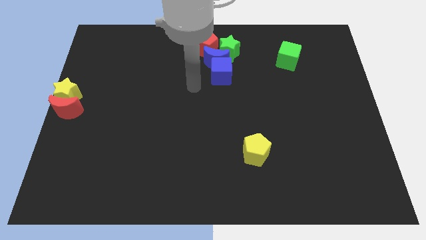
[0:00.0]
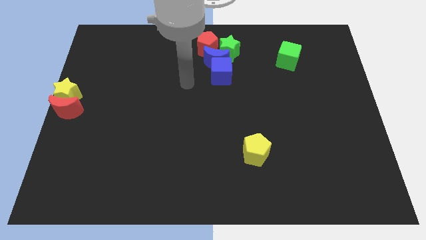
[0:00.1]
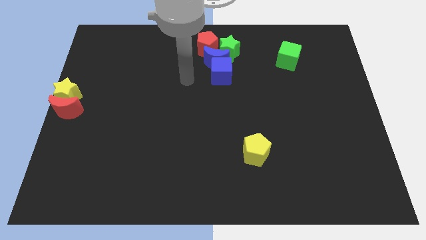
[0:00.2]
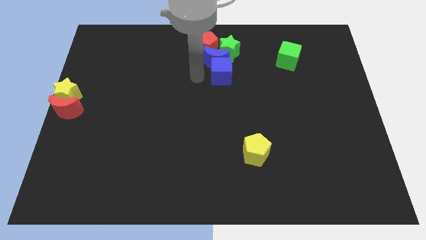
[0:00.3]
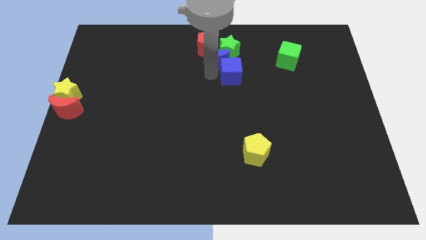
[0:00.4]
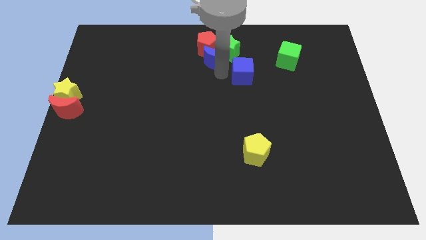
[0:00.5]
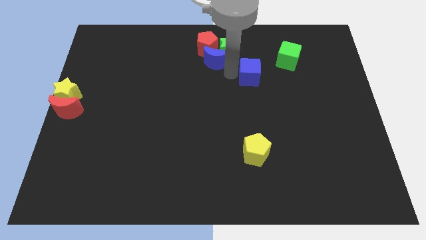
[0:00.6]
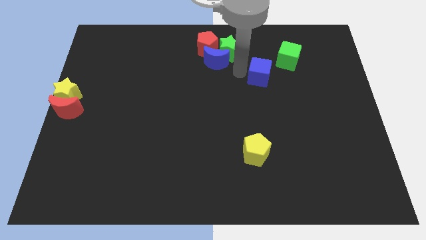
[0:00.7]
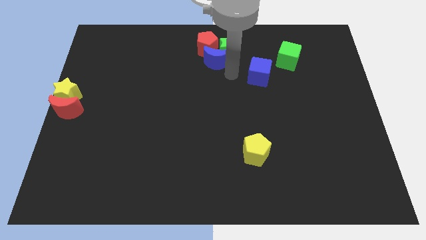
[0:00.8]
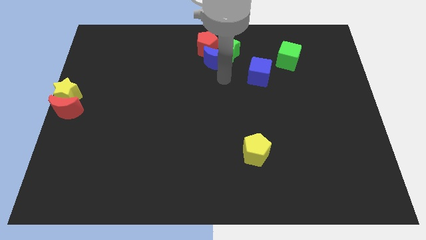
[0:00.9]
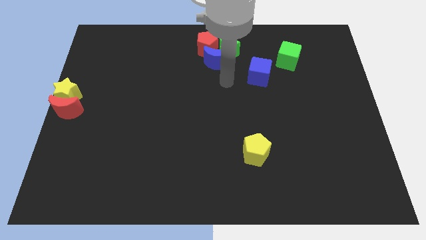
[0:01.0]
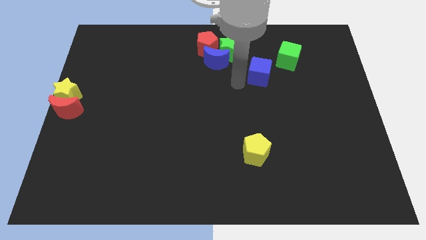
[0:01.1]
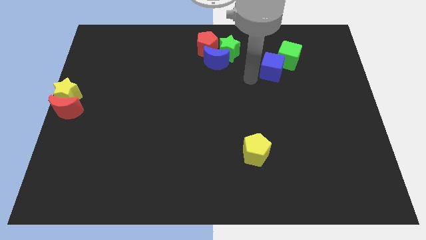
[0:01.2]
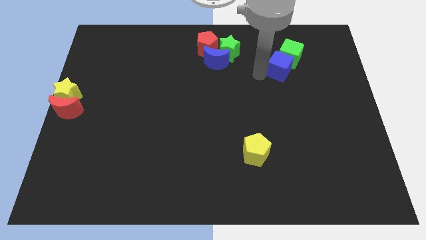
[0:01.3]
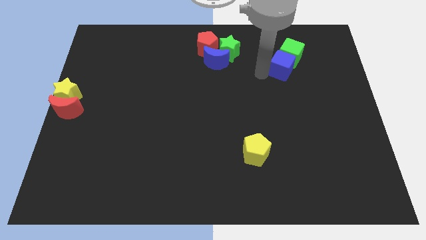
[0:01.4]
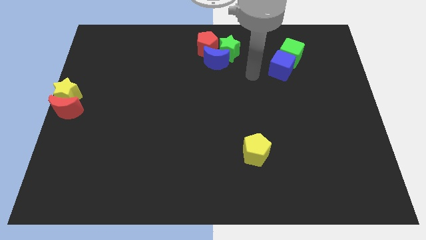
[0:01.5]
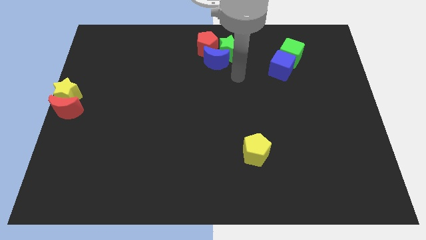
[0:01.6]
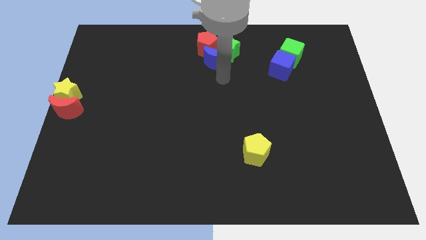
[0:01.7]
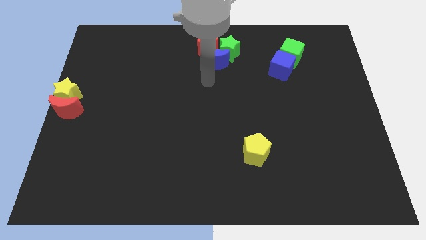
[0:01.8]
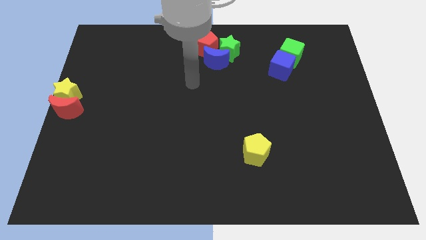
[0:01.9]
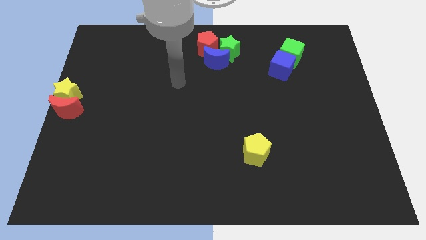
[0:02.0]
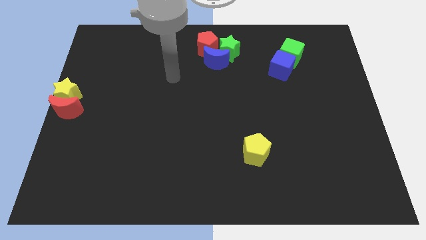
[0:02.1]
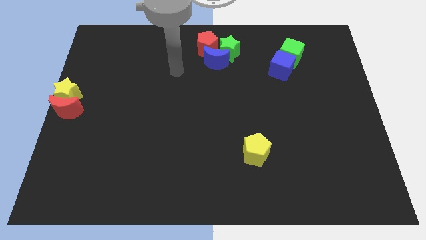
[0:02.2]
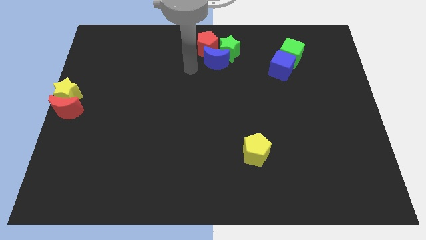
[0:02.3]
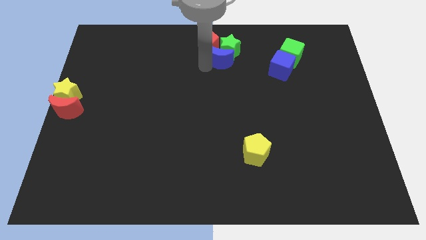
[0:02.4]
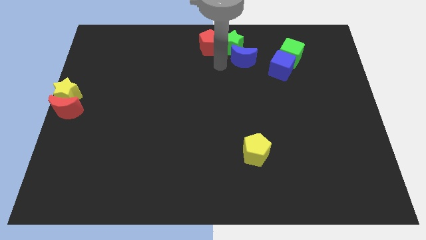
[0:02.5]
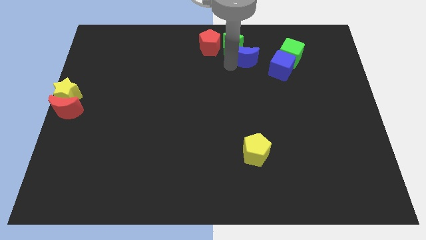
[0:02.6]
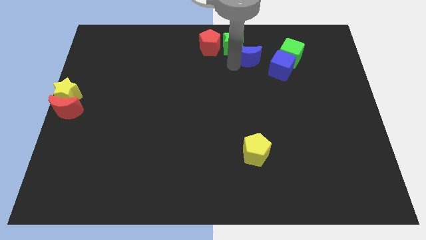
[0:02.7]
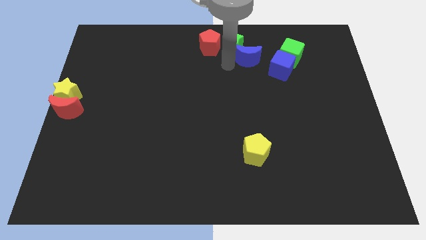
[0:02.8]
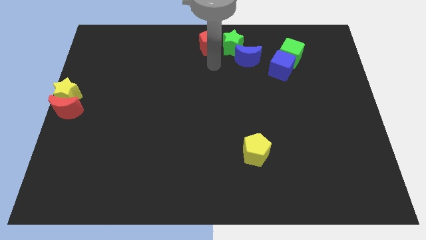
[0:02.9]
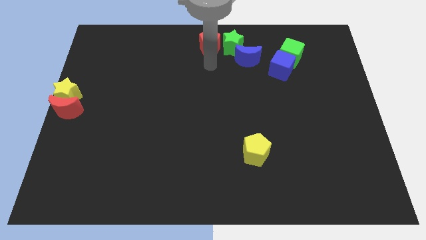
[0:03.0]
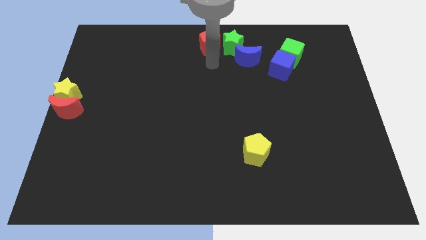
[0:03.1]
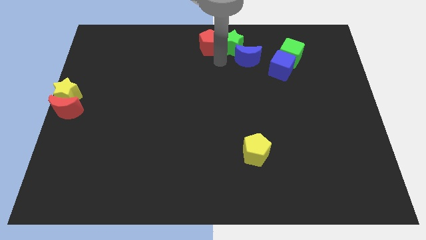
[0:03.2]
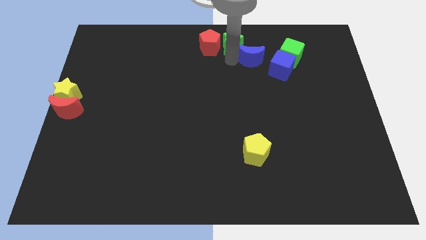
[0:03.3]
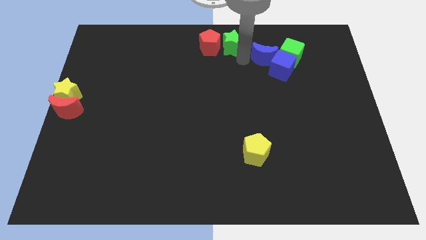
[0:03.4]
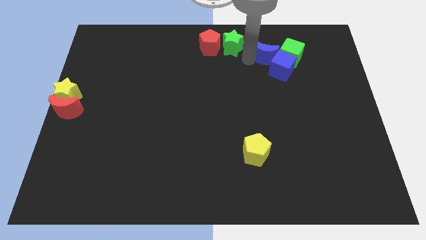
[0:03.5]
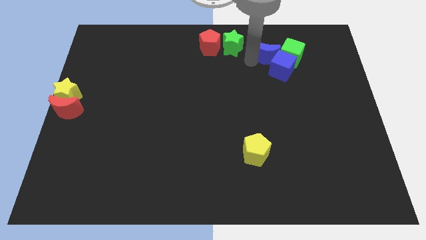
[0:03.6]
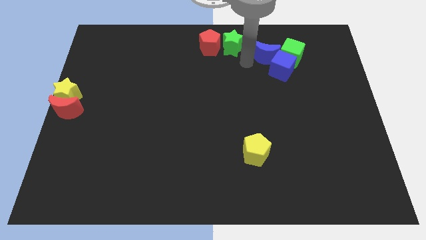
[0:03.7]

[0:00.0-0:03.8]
push the blue cube and blue crescent close to the green cube

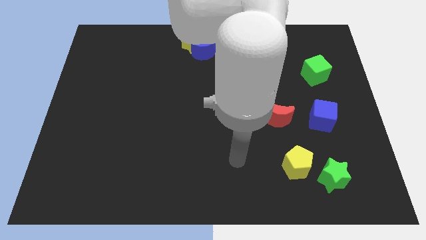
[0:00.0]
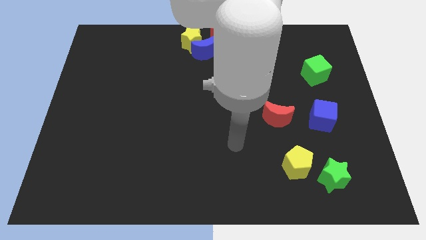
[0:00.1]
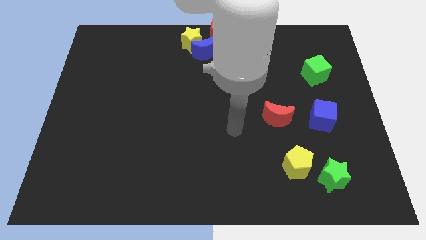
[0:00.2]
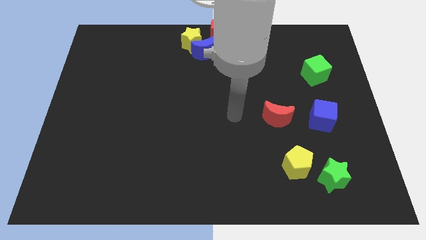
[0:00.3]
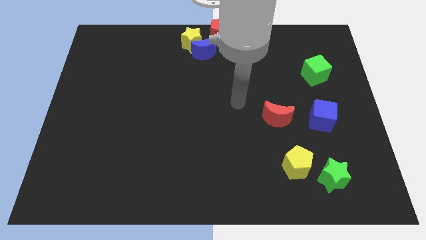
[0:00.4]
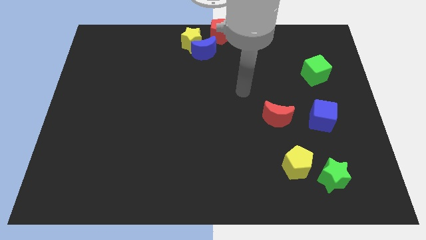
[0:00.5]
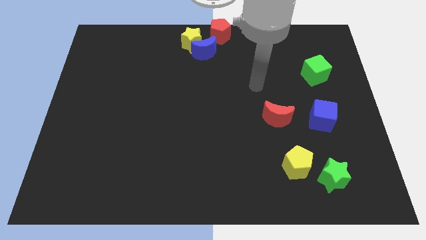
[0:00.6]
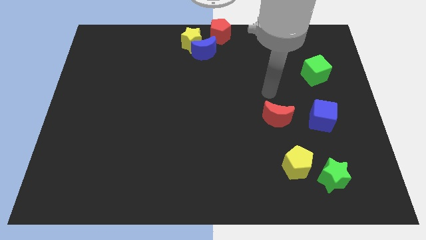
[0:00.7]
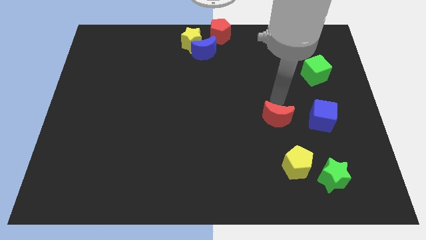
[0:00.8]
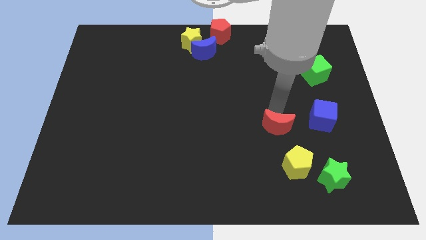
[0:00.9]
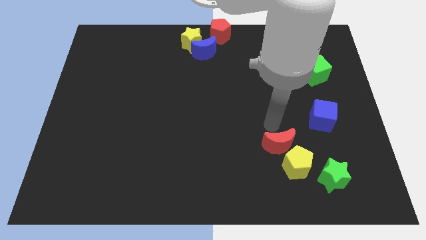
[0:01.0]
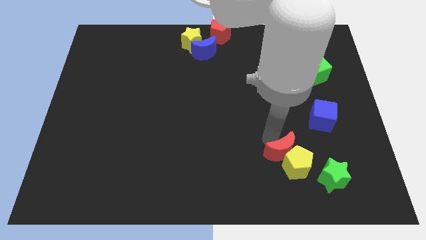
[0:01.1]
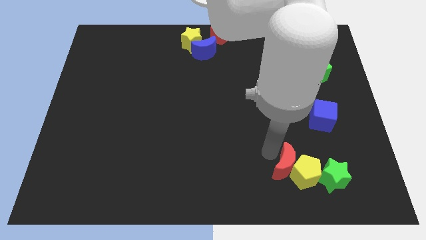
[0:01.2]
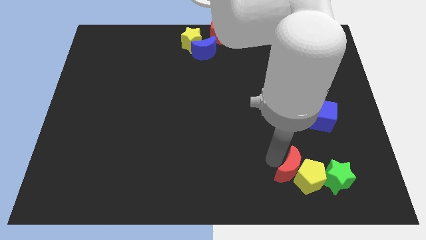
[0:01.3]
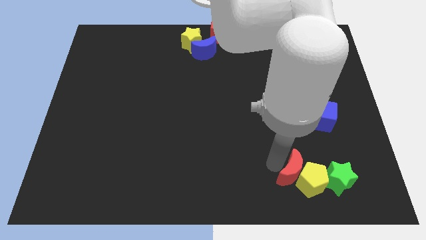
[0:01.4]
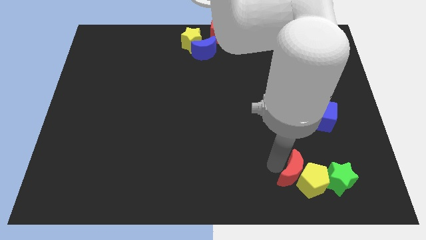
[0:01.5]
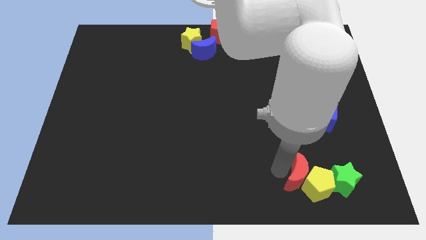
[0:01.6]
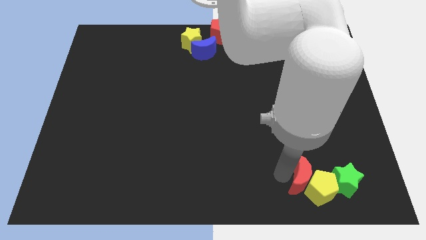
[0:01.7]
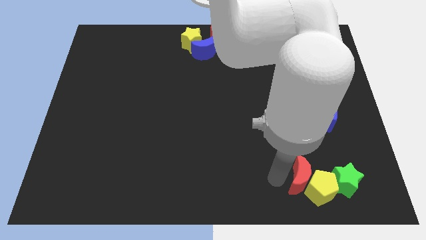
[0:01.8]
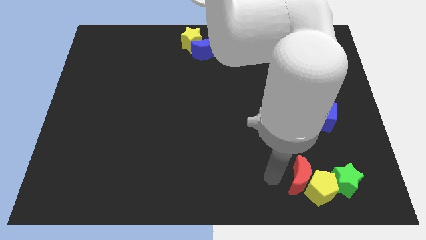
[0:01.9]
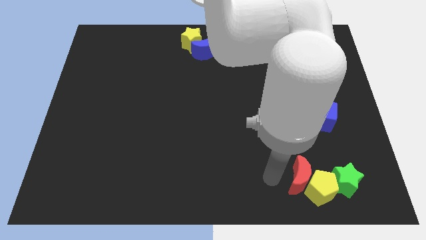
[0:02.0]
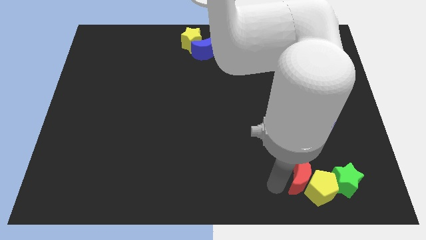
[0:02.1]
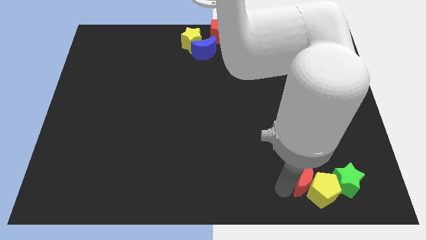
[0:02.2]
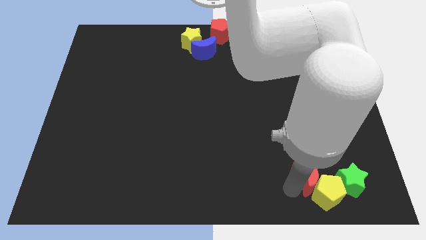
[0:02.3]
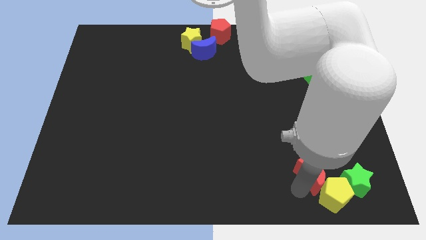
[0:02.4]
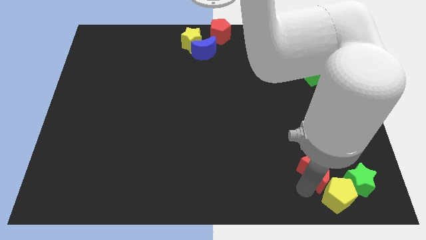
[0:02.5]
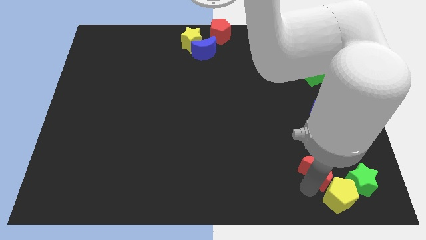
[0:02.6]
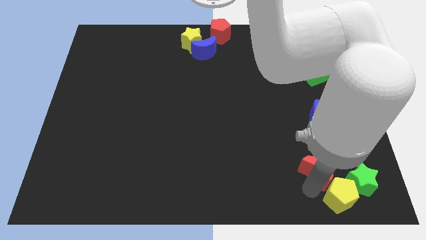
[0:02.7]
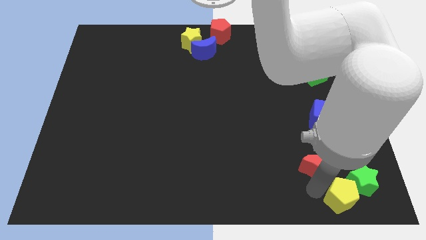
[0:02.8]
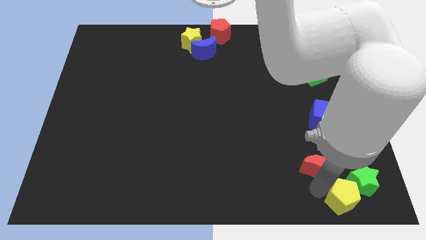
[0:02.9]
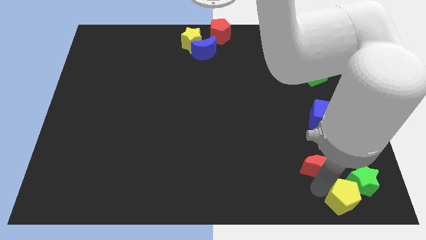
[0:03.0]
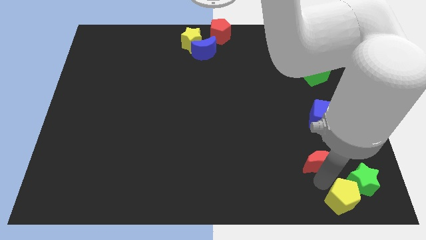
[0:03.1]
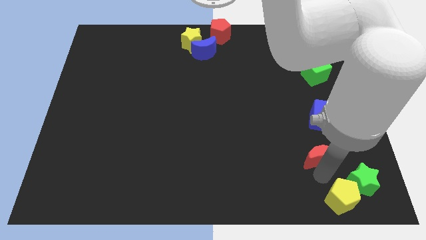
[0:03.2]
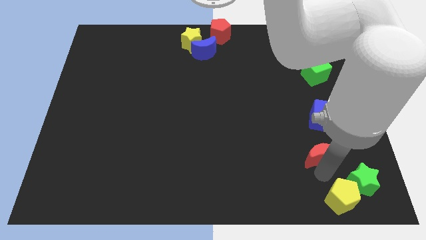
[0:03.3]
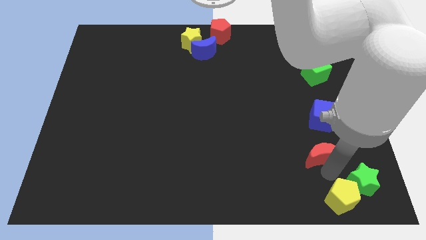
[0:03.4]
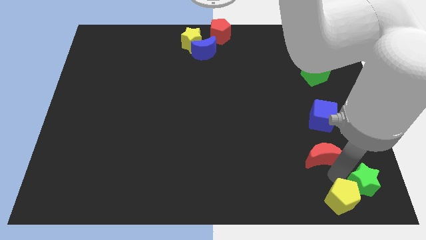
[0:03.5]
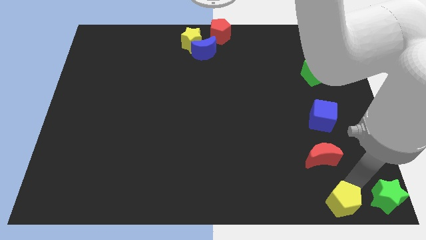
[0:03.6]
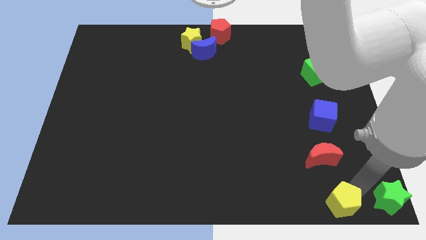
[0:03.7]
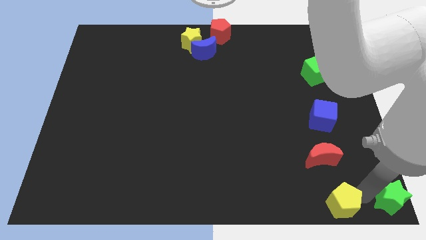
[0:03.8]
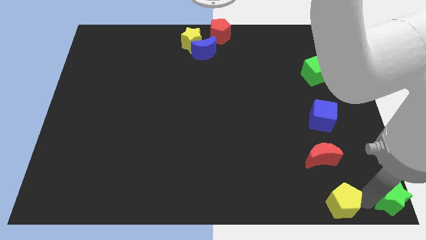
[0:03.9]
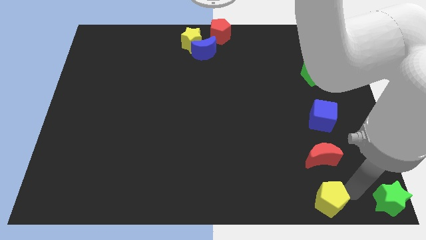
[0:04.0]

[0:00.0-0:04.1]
push the red crescent into the yellow pentagon

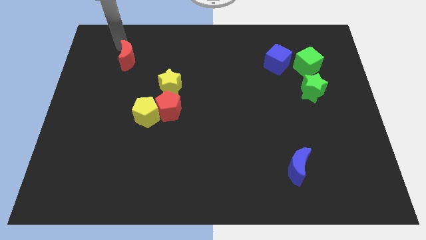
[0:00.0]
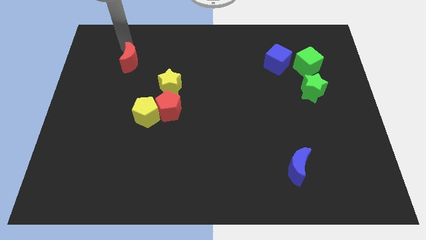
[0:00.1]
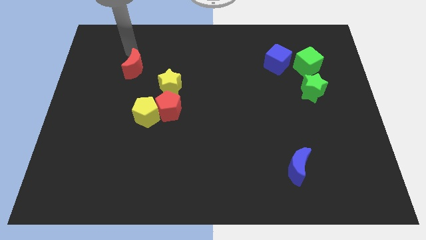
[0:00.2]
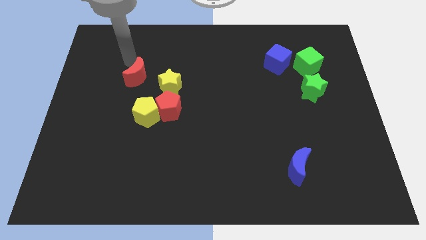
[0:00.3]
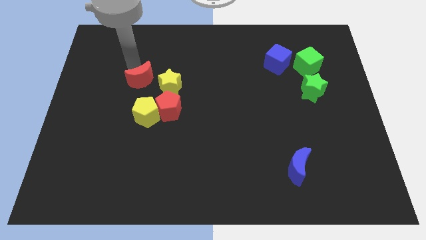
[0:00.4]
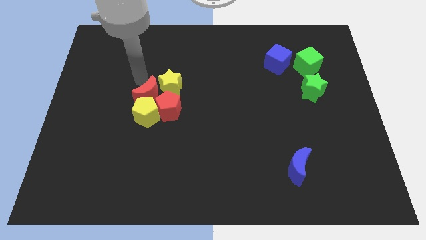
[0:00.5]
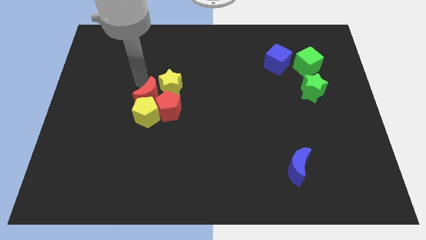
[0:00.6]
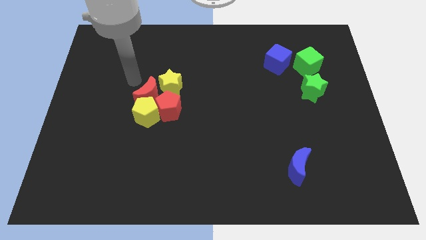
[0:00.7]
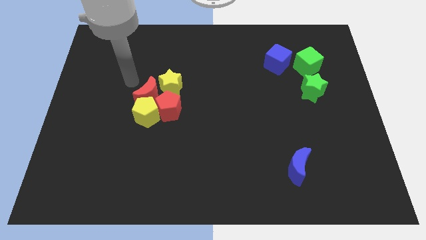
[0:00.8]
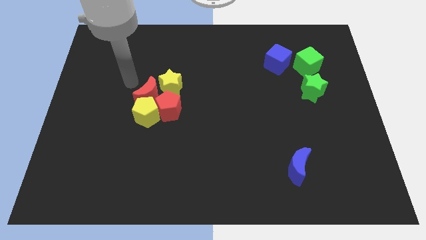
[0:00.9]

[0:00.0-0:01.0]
move red moon to the left of the yellow star

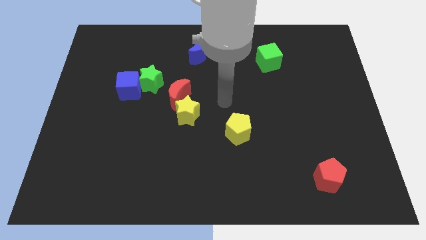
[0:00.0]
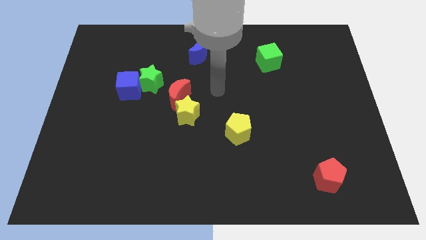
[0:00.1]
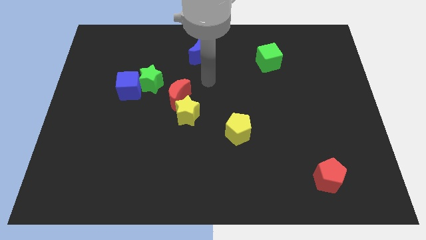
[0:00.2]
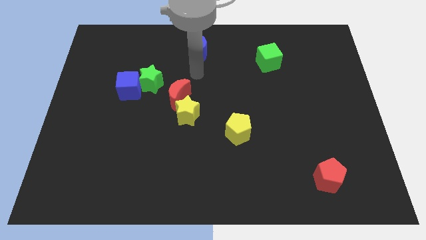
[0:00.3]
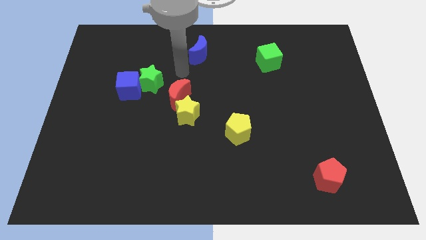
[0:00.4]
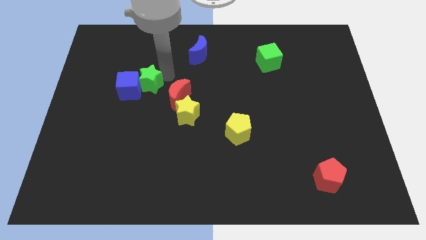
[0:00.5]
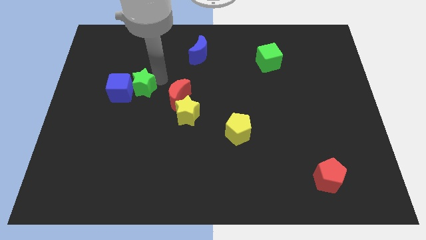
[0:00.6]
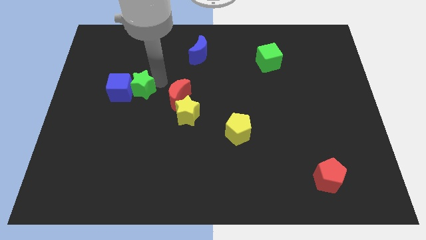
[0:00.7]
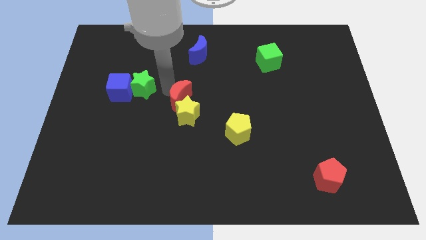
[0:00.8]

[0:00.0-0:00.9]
move your arm into green star
